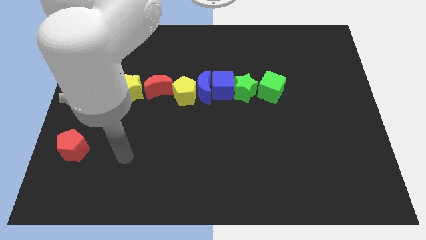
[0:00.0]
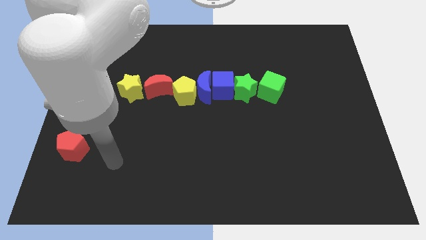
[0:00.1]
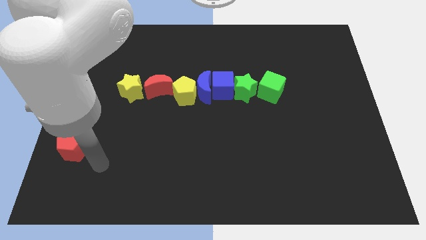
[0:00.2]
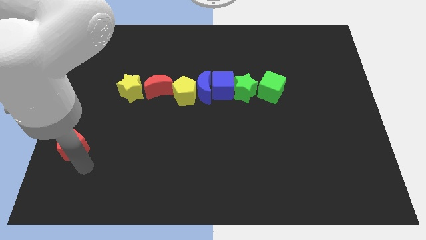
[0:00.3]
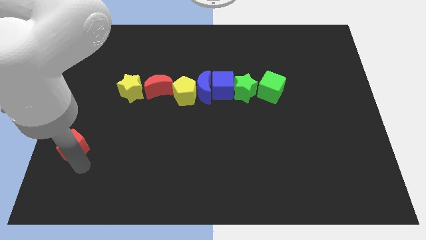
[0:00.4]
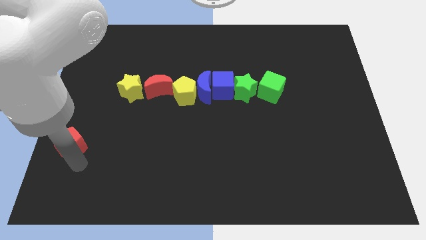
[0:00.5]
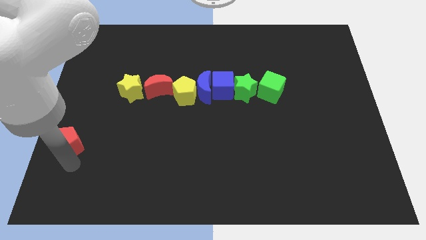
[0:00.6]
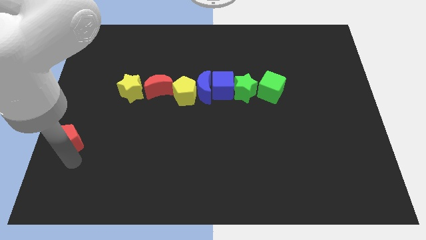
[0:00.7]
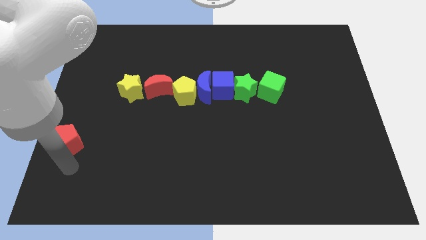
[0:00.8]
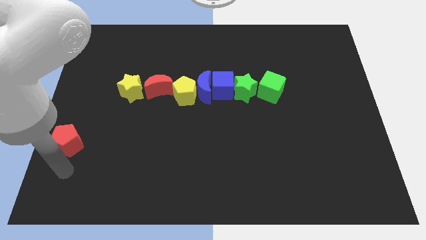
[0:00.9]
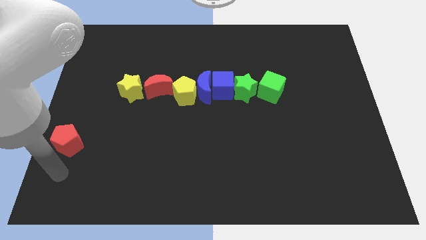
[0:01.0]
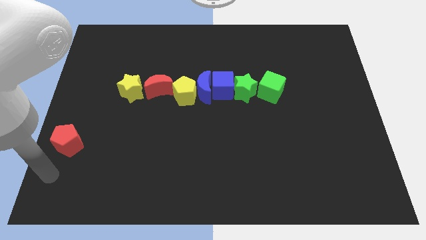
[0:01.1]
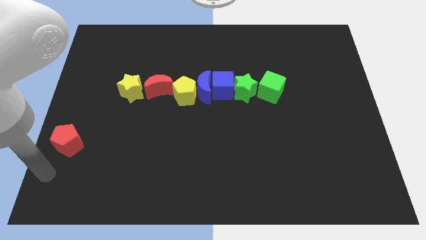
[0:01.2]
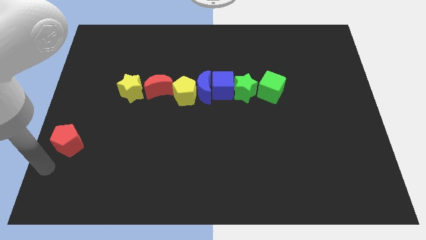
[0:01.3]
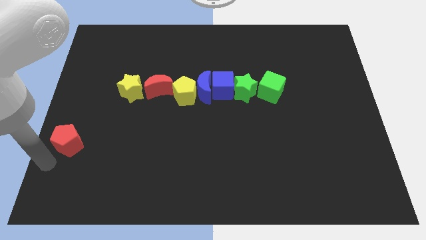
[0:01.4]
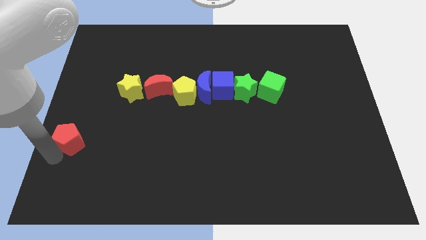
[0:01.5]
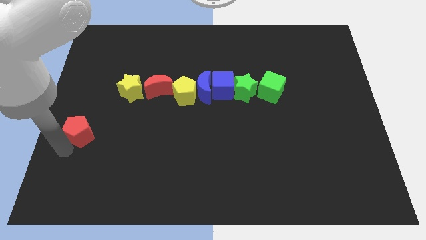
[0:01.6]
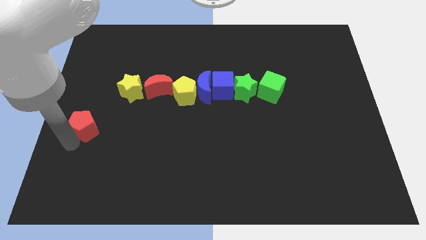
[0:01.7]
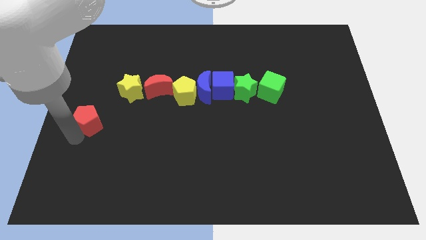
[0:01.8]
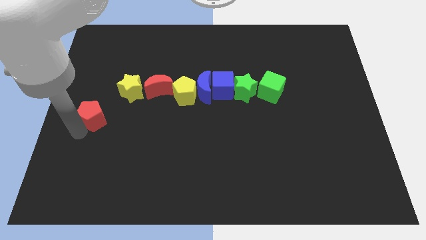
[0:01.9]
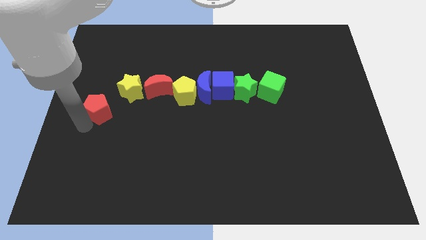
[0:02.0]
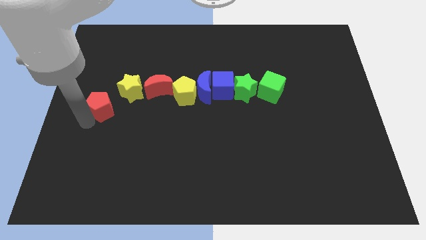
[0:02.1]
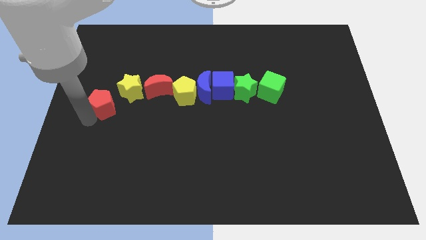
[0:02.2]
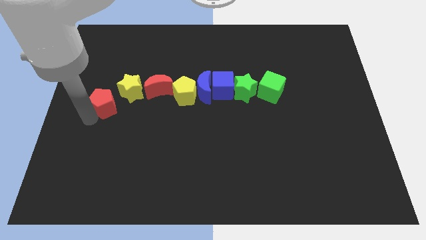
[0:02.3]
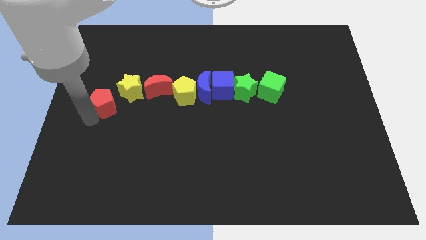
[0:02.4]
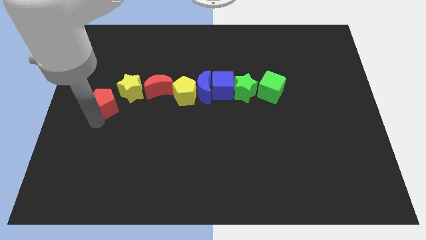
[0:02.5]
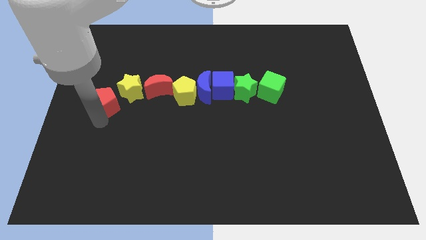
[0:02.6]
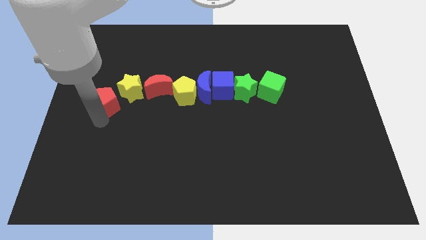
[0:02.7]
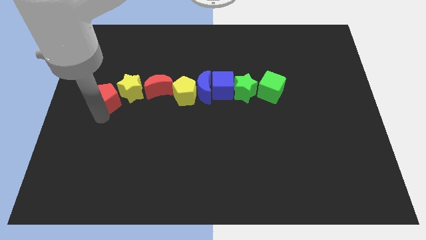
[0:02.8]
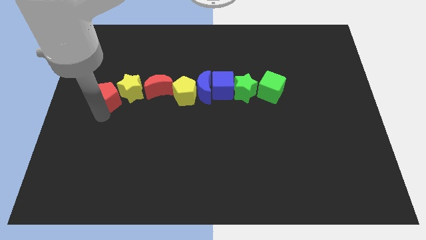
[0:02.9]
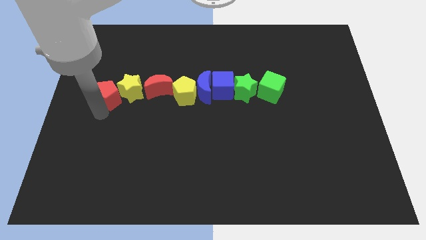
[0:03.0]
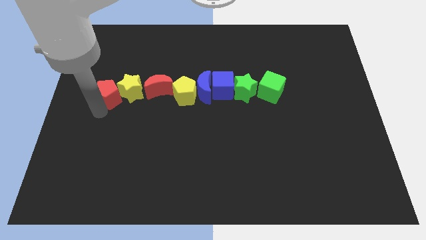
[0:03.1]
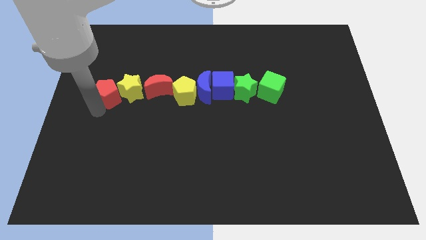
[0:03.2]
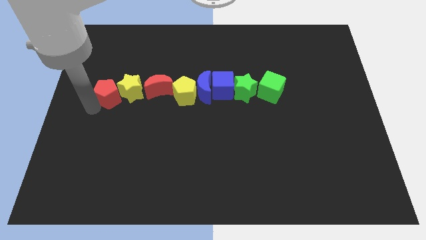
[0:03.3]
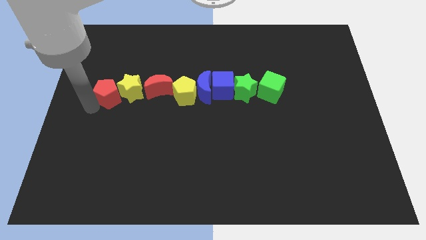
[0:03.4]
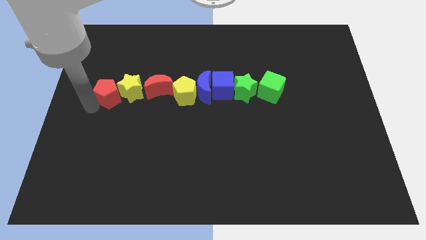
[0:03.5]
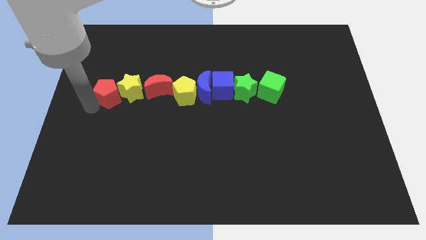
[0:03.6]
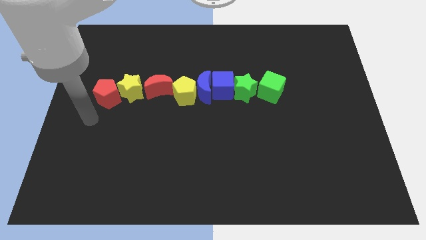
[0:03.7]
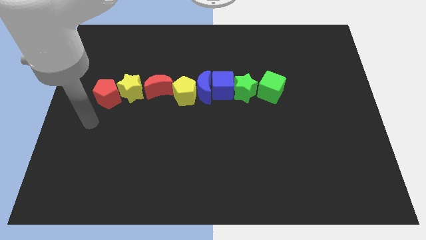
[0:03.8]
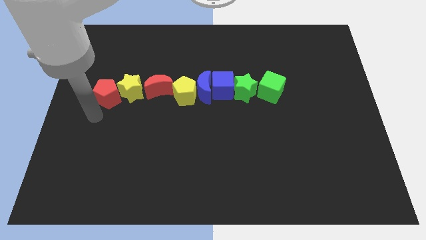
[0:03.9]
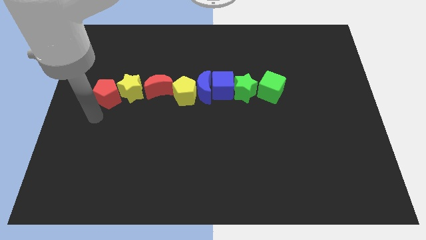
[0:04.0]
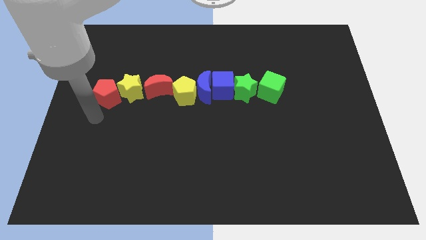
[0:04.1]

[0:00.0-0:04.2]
move red pentagon into yellow star

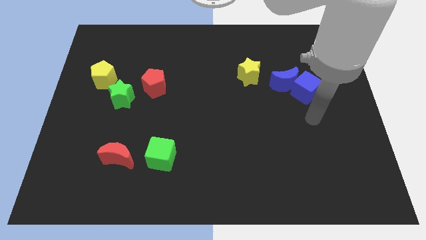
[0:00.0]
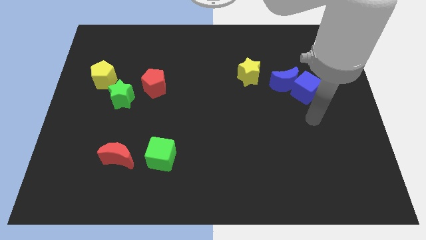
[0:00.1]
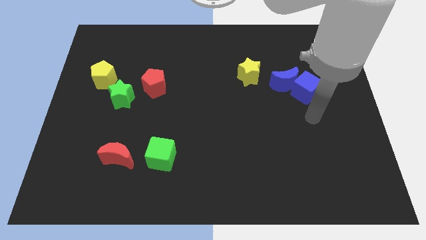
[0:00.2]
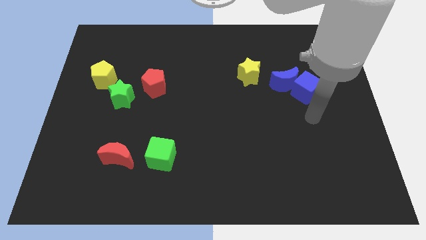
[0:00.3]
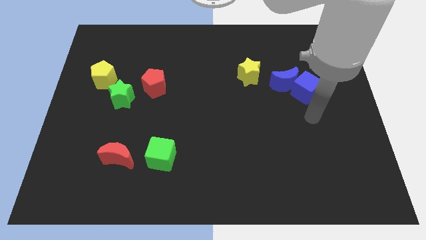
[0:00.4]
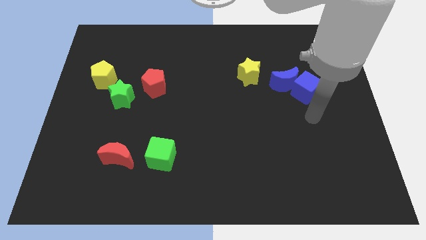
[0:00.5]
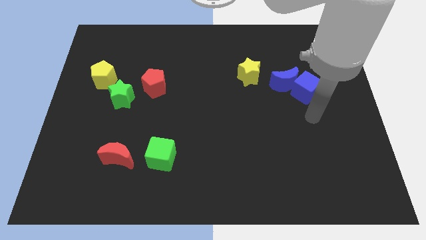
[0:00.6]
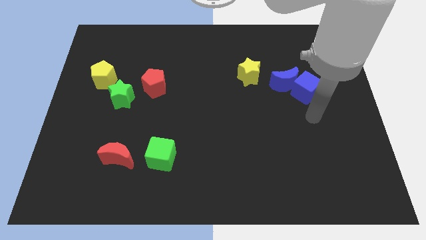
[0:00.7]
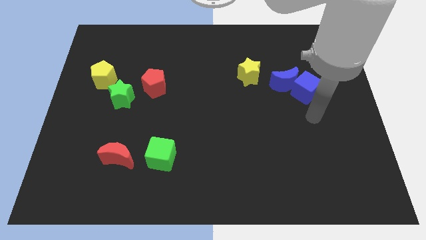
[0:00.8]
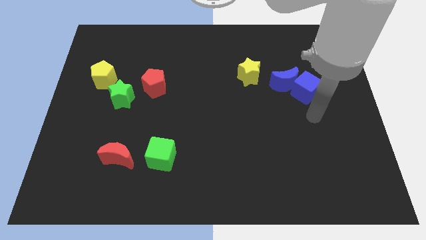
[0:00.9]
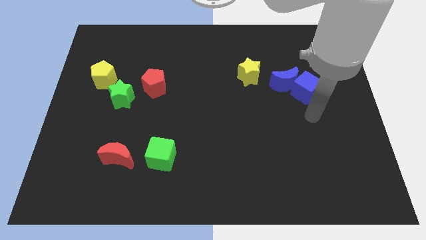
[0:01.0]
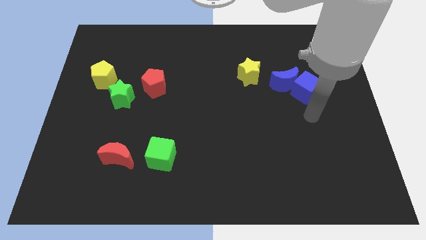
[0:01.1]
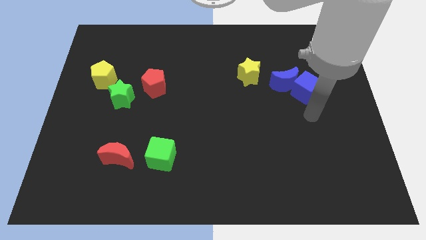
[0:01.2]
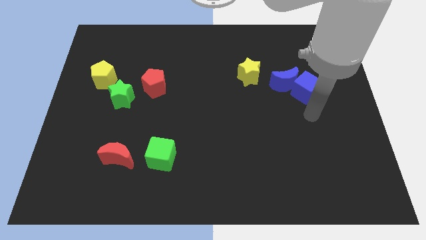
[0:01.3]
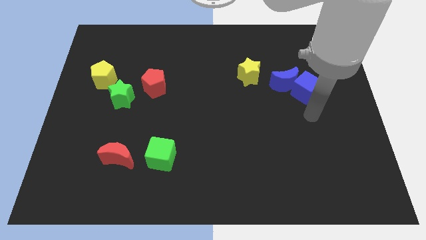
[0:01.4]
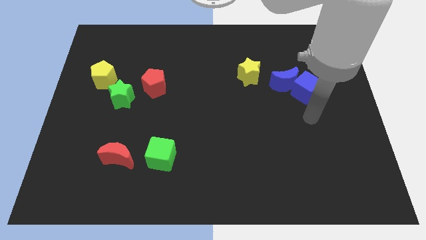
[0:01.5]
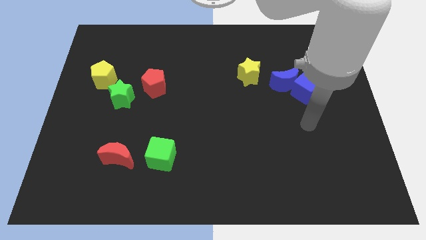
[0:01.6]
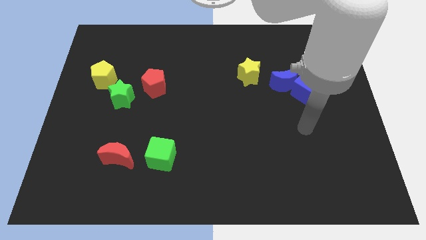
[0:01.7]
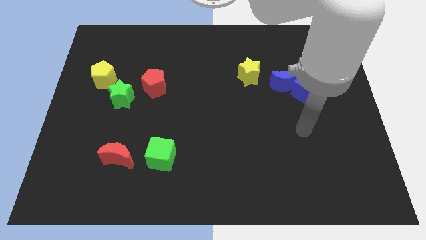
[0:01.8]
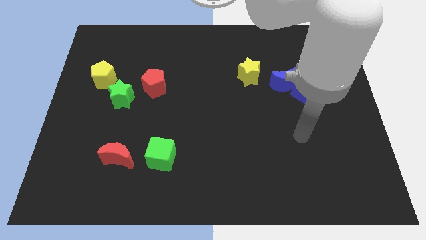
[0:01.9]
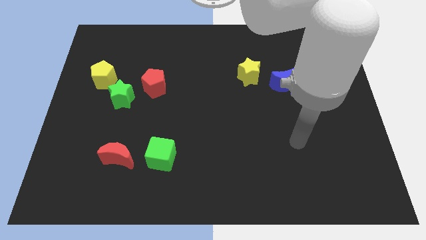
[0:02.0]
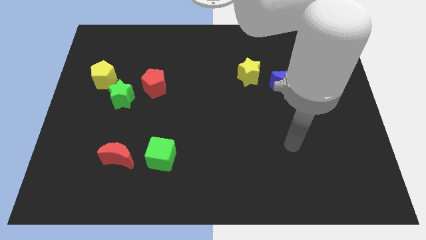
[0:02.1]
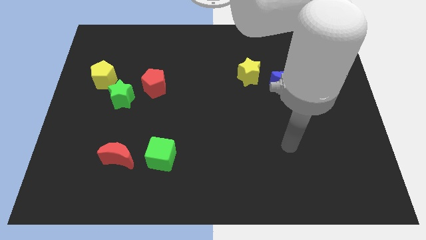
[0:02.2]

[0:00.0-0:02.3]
move arm vertically below blue moon

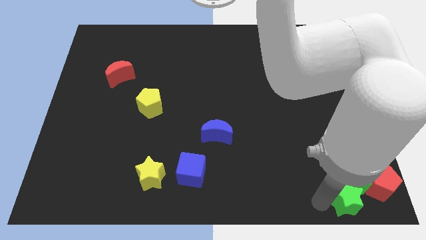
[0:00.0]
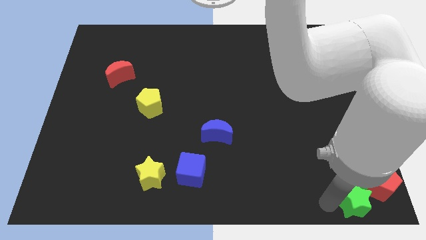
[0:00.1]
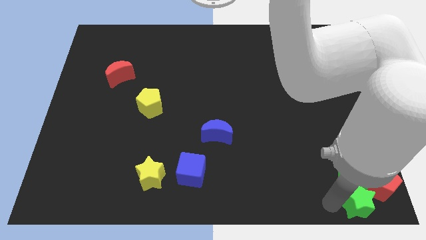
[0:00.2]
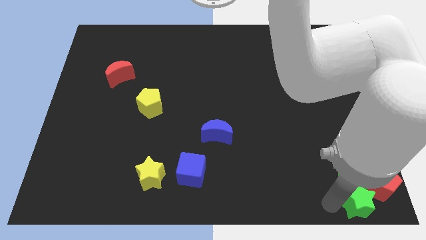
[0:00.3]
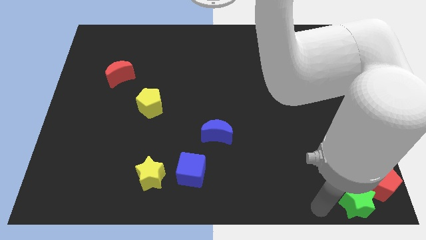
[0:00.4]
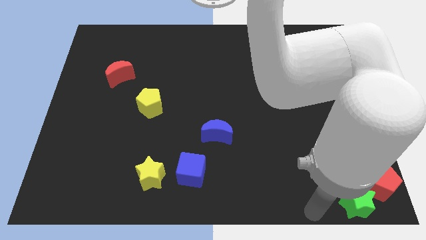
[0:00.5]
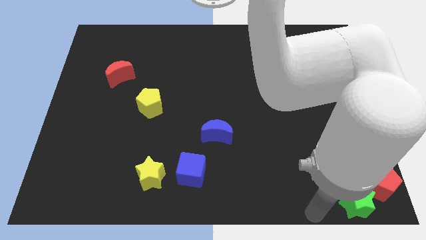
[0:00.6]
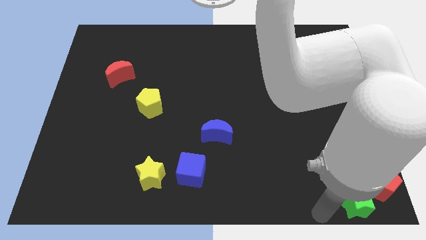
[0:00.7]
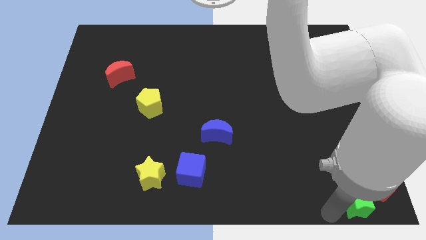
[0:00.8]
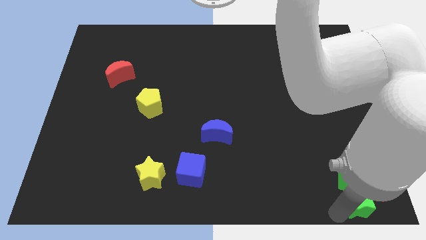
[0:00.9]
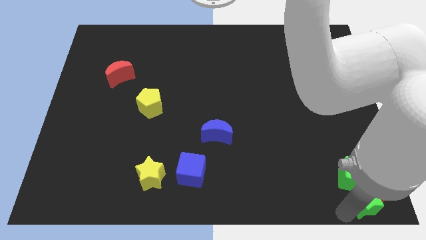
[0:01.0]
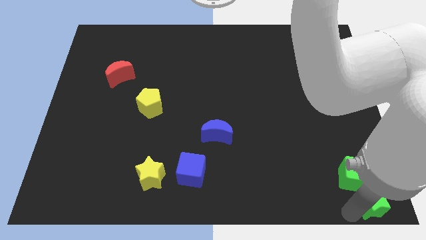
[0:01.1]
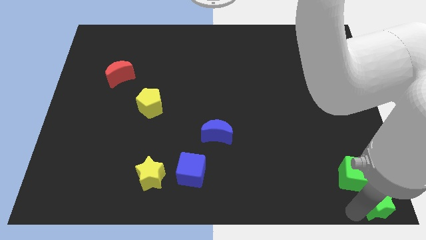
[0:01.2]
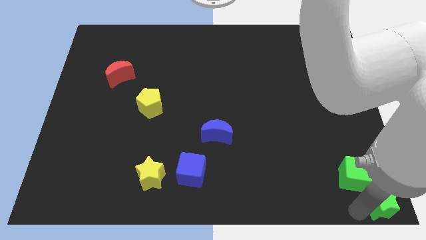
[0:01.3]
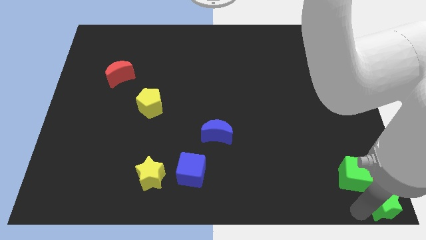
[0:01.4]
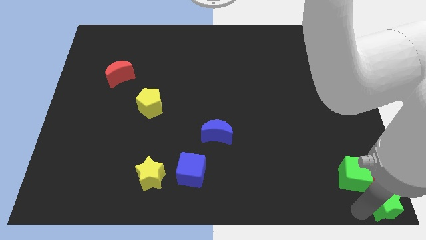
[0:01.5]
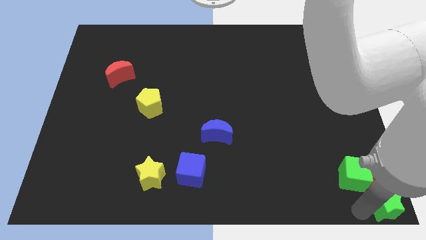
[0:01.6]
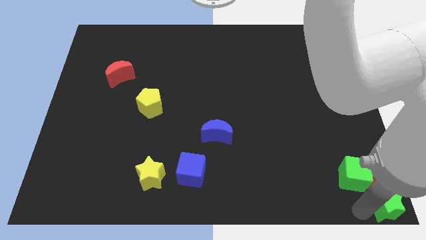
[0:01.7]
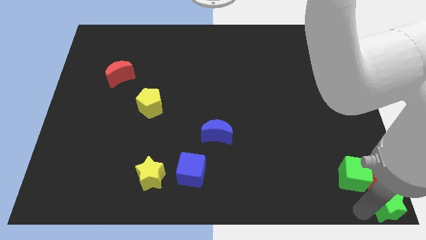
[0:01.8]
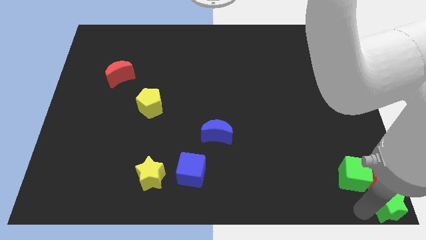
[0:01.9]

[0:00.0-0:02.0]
move the green star to the right bottom

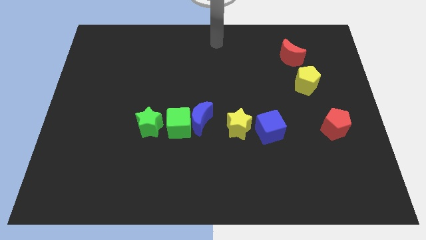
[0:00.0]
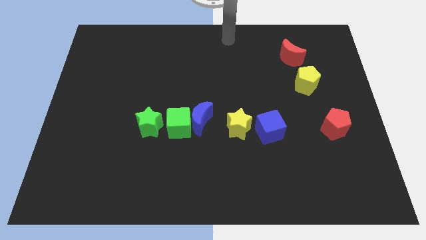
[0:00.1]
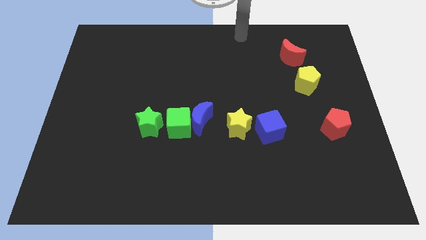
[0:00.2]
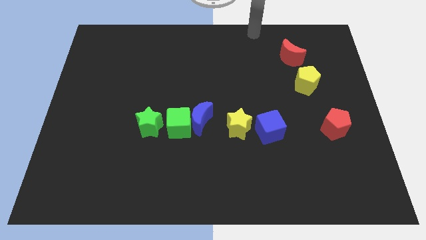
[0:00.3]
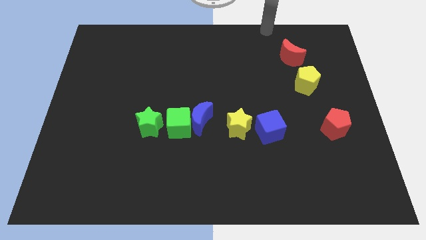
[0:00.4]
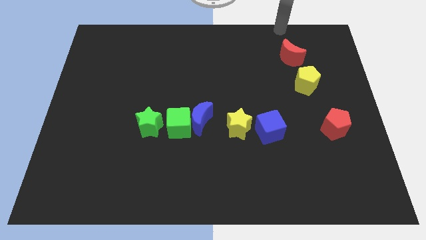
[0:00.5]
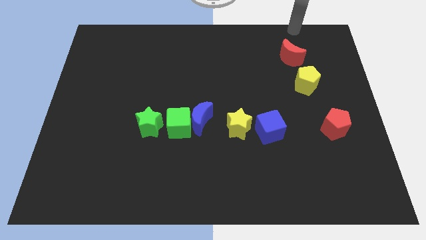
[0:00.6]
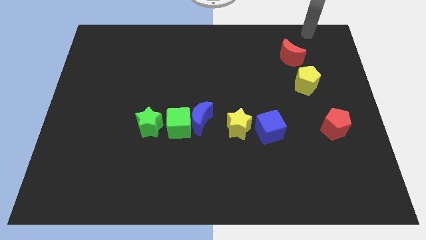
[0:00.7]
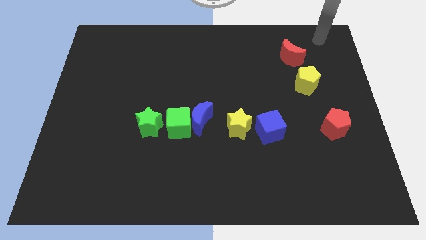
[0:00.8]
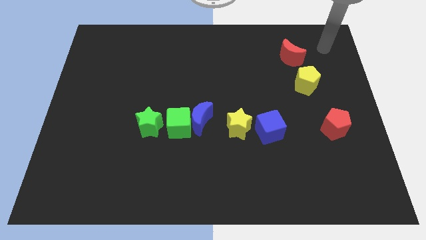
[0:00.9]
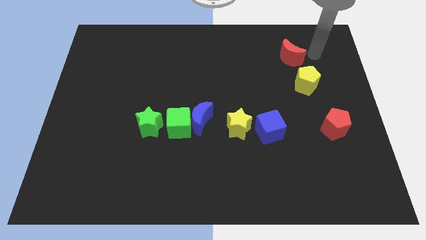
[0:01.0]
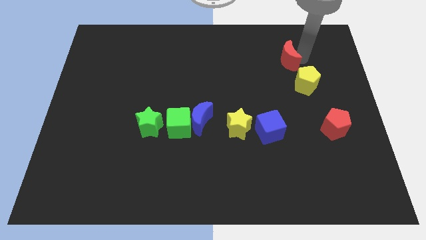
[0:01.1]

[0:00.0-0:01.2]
move your arm to the right of red crescent
